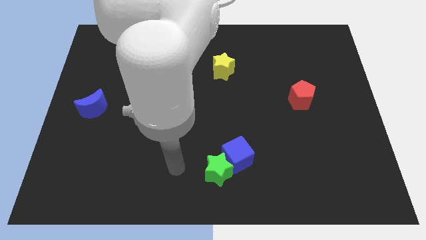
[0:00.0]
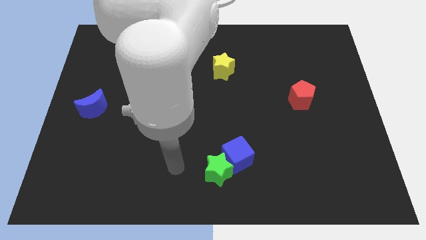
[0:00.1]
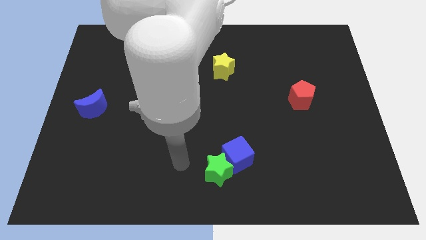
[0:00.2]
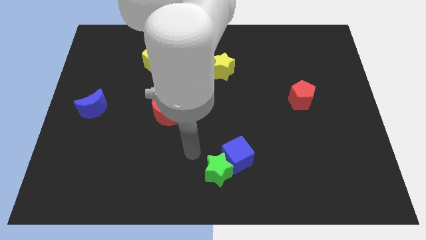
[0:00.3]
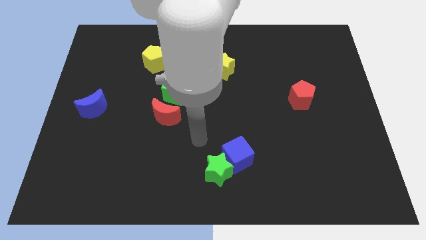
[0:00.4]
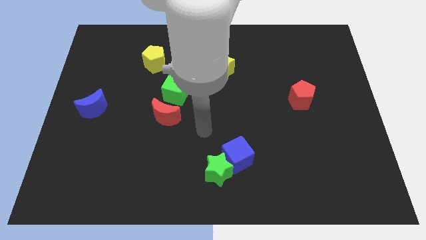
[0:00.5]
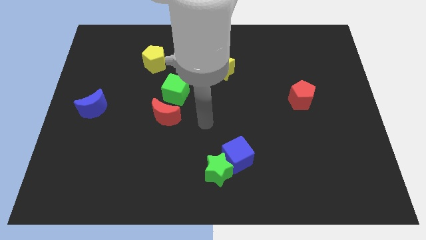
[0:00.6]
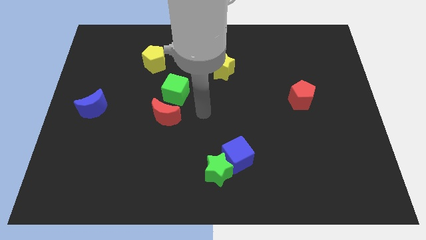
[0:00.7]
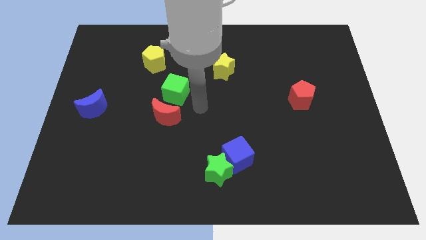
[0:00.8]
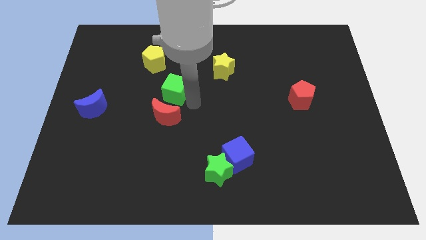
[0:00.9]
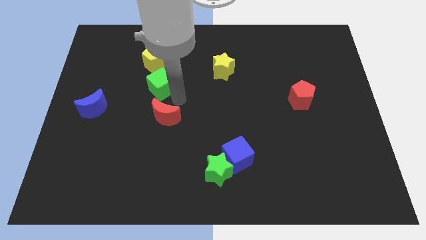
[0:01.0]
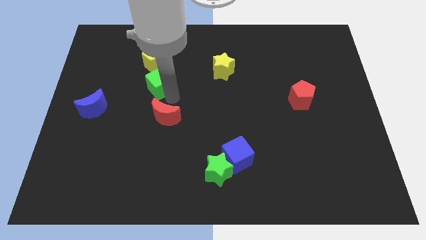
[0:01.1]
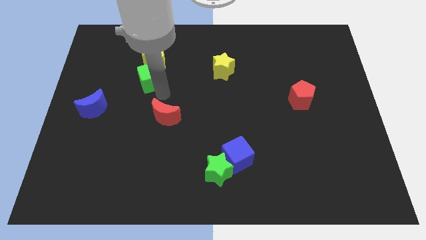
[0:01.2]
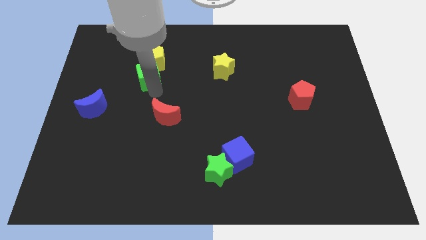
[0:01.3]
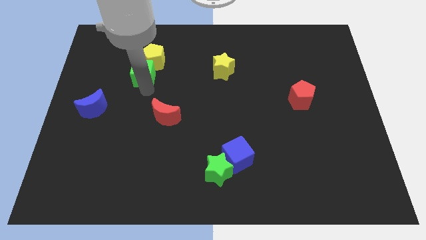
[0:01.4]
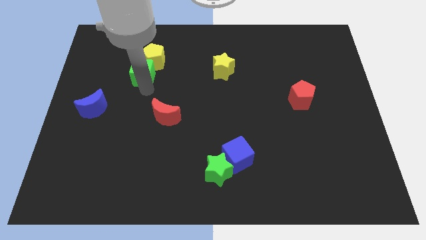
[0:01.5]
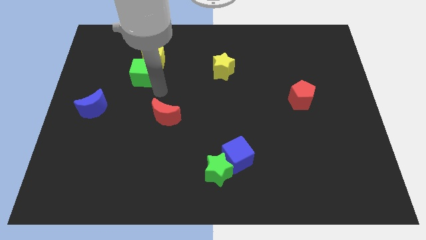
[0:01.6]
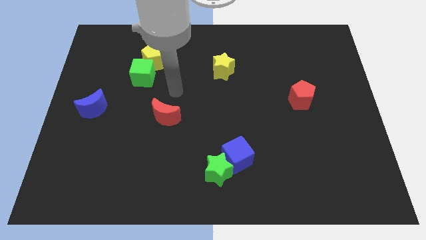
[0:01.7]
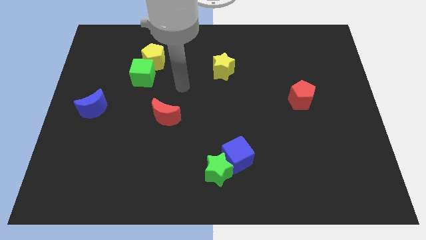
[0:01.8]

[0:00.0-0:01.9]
push the green cube to the bottom side of the yellow pentagon

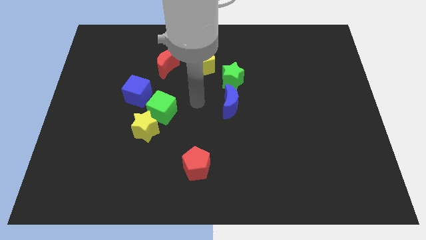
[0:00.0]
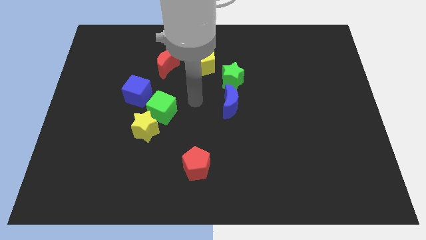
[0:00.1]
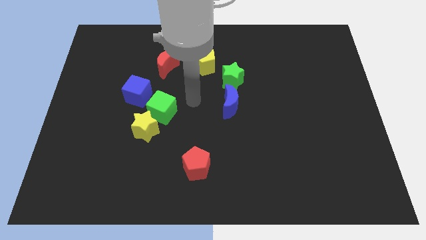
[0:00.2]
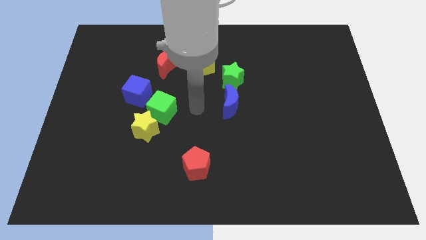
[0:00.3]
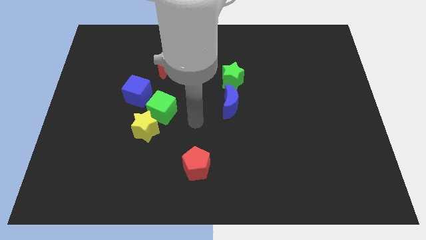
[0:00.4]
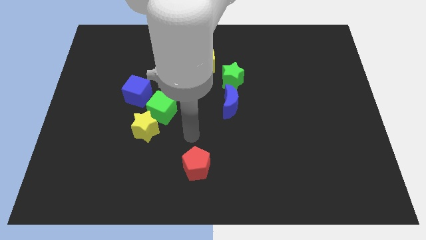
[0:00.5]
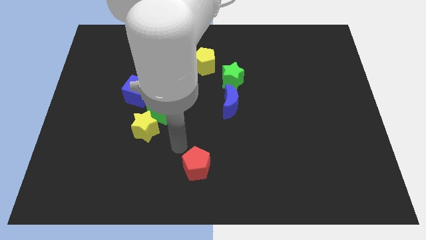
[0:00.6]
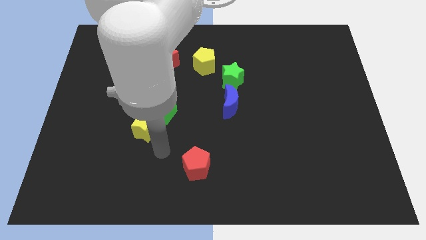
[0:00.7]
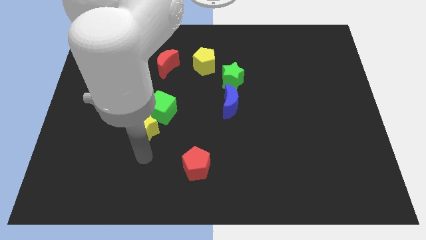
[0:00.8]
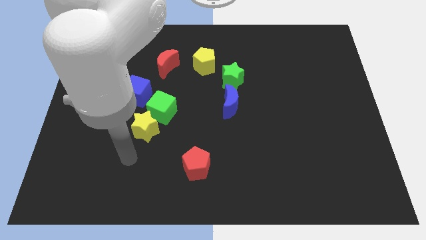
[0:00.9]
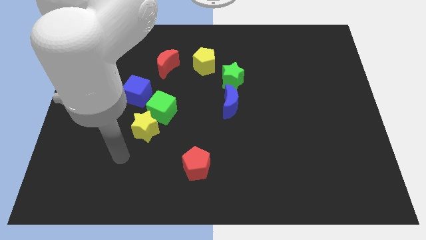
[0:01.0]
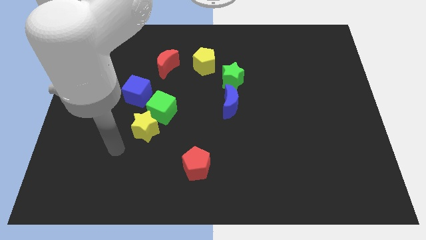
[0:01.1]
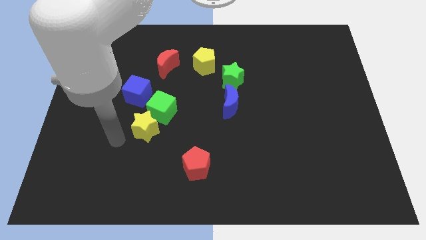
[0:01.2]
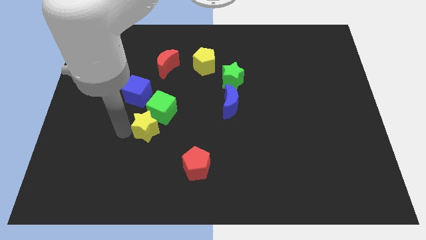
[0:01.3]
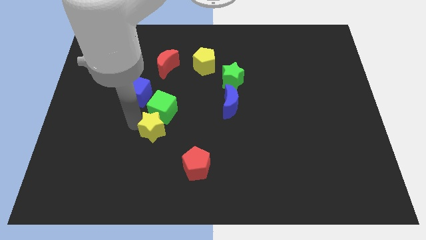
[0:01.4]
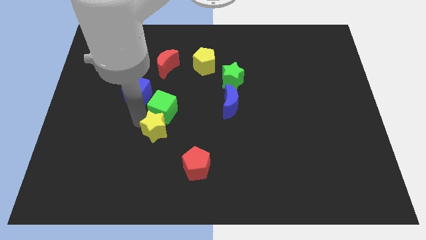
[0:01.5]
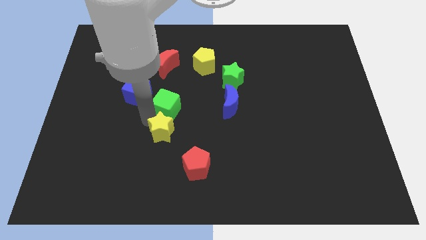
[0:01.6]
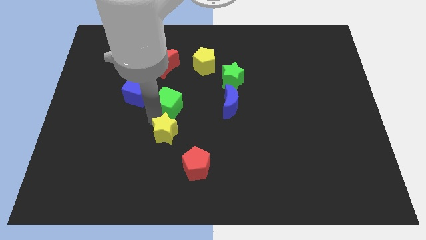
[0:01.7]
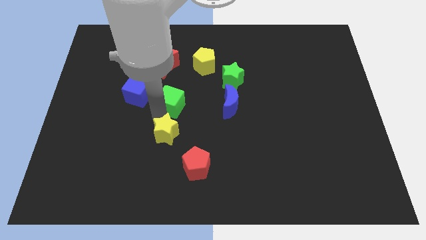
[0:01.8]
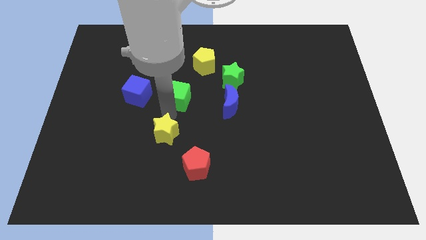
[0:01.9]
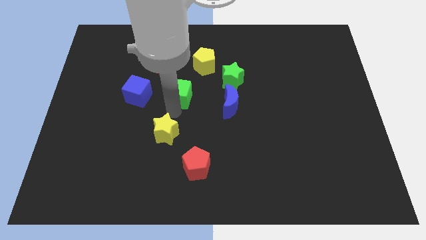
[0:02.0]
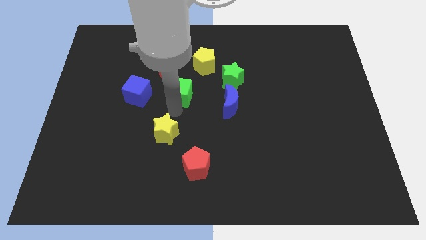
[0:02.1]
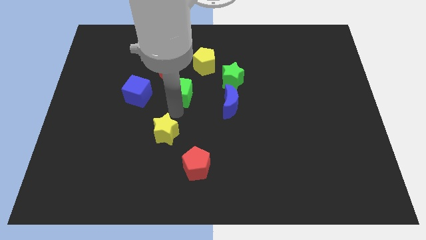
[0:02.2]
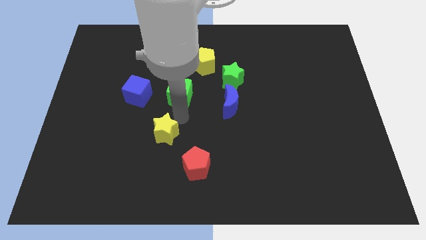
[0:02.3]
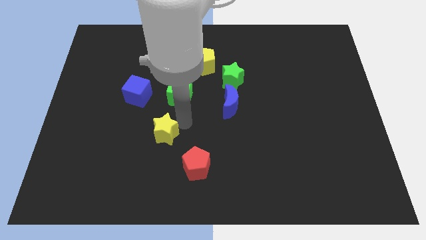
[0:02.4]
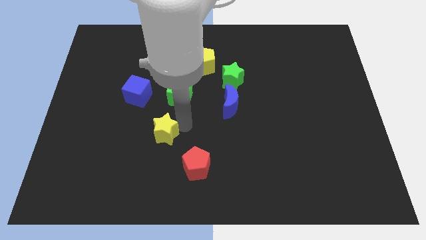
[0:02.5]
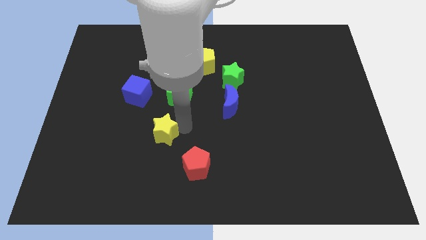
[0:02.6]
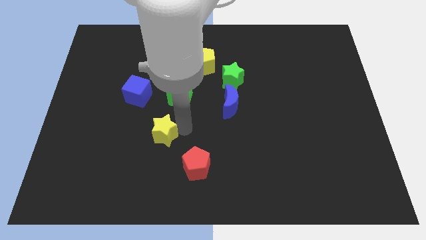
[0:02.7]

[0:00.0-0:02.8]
move the yellow star and green cube sightly upwards

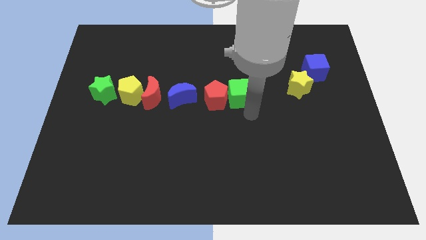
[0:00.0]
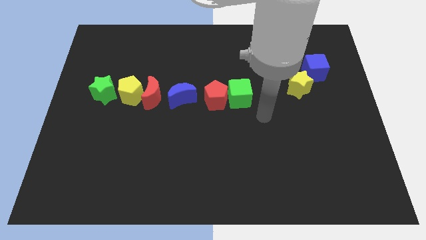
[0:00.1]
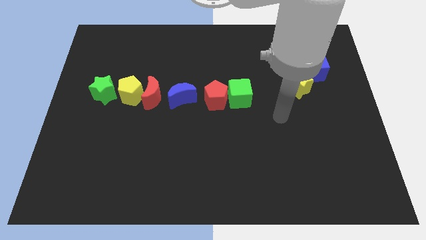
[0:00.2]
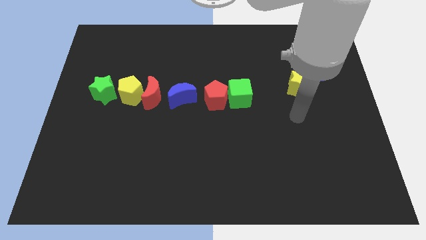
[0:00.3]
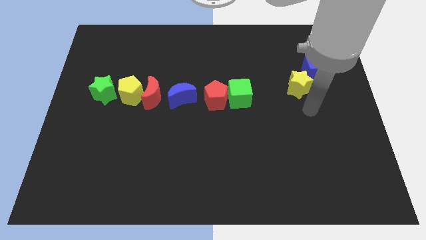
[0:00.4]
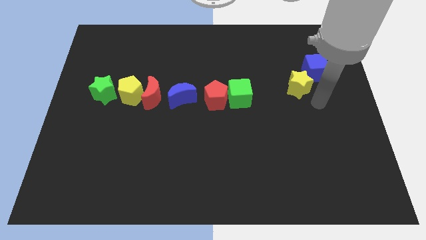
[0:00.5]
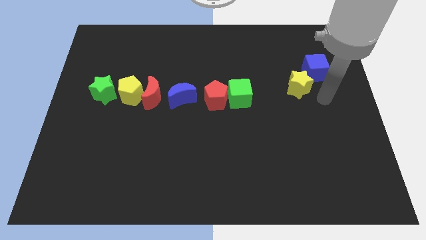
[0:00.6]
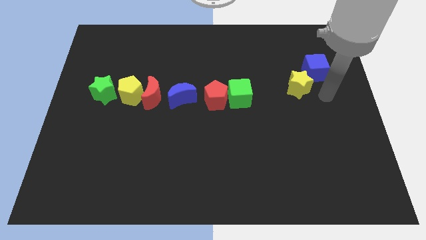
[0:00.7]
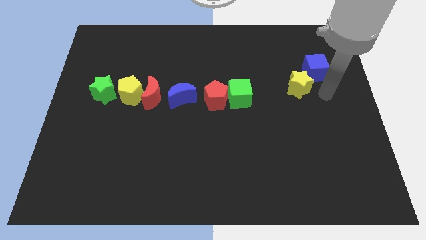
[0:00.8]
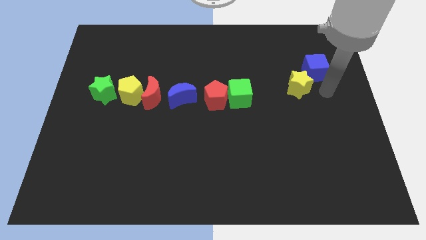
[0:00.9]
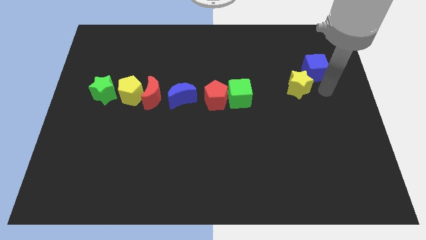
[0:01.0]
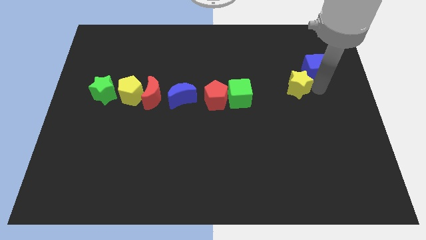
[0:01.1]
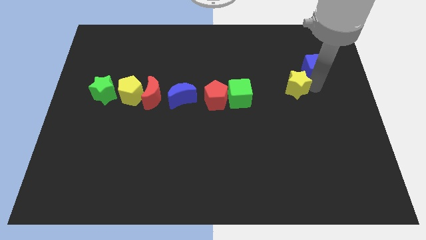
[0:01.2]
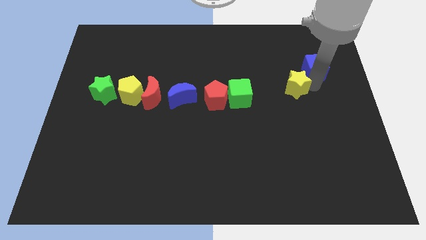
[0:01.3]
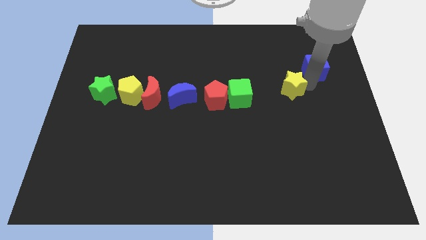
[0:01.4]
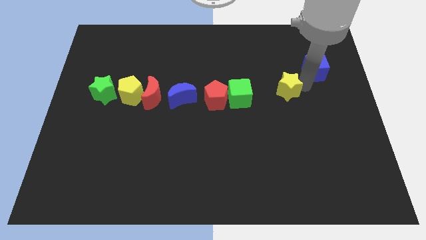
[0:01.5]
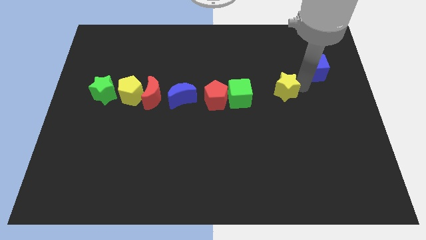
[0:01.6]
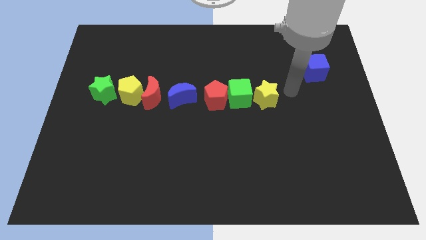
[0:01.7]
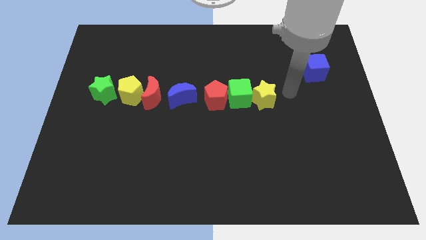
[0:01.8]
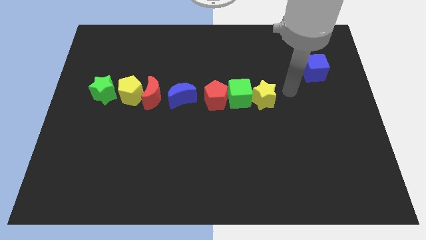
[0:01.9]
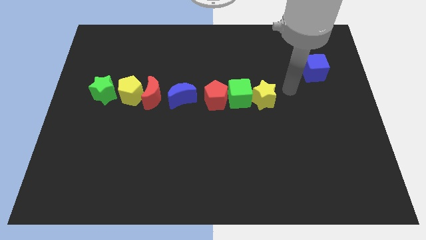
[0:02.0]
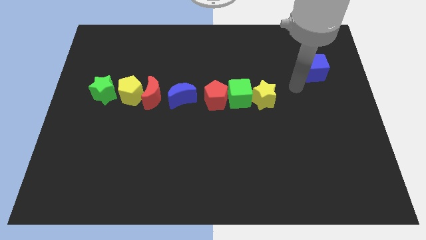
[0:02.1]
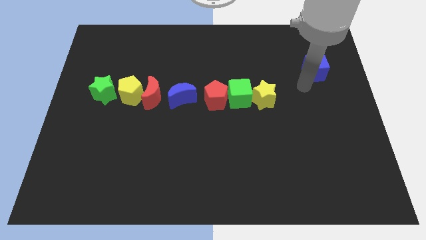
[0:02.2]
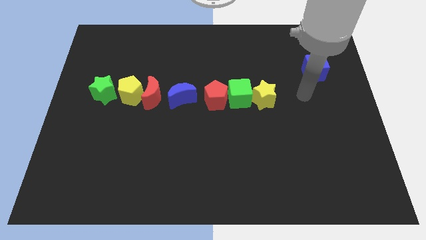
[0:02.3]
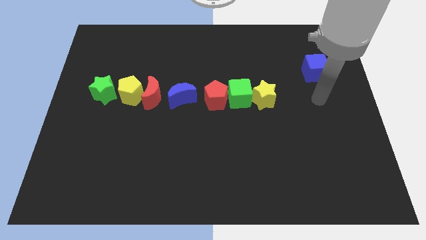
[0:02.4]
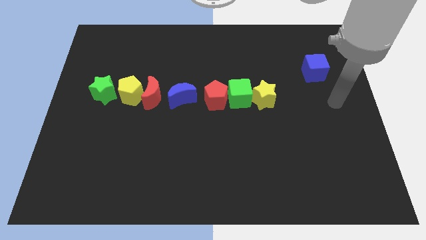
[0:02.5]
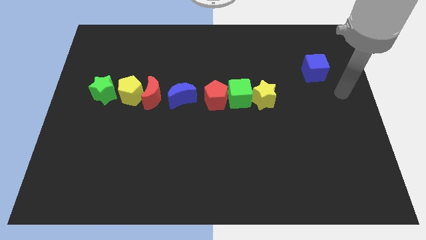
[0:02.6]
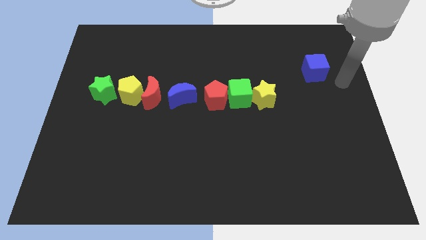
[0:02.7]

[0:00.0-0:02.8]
place the yellow star to the right of the green cube

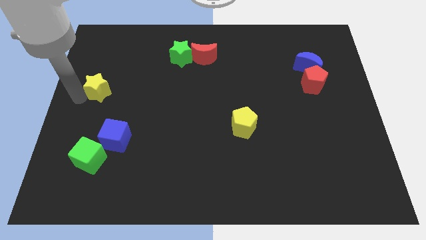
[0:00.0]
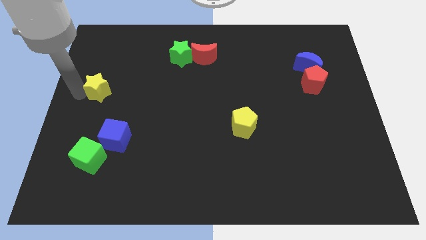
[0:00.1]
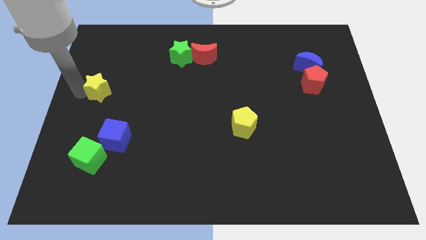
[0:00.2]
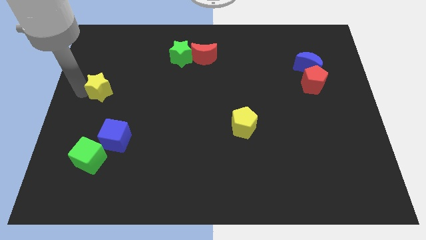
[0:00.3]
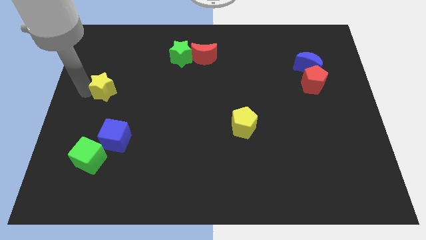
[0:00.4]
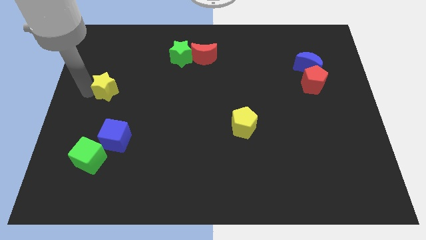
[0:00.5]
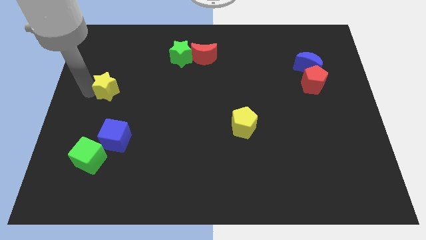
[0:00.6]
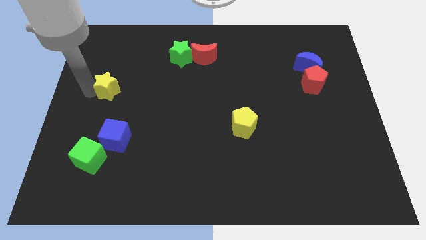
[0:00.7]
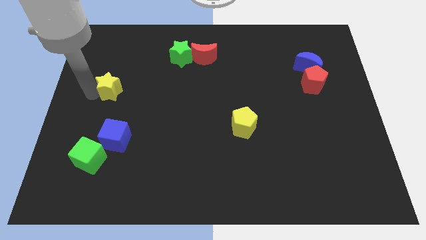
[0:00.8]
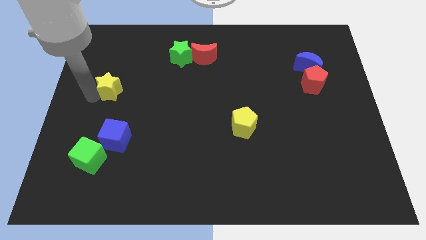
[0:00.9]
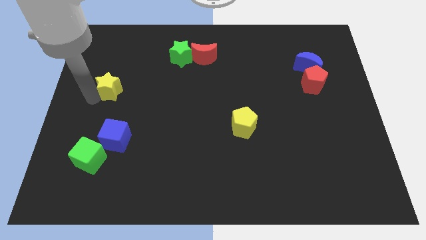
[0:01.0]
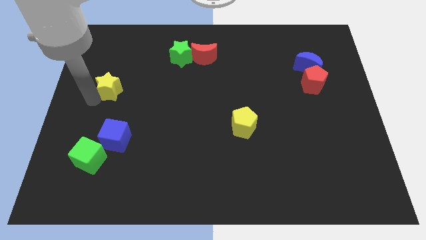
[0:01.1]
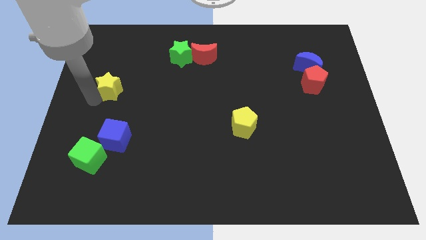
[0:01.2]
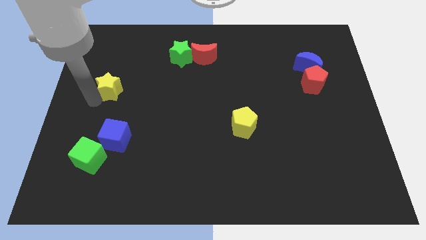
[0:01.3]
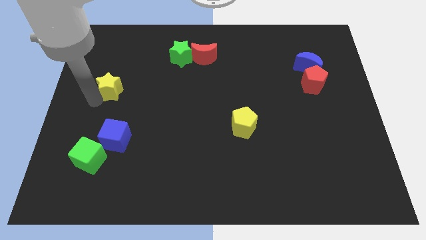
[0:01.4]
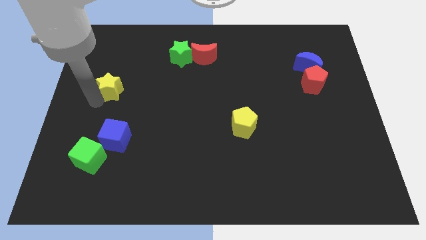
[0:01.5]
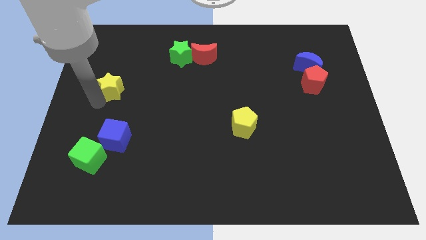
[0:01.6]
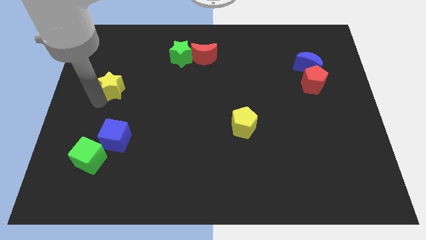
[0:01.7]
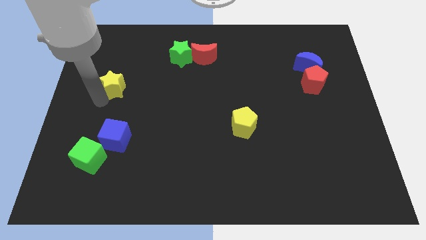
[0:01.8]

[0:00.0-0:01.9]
place the yellow star vertically above the blue cube
